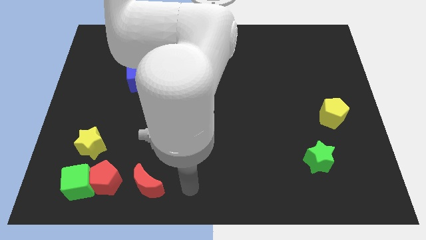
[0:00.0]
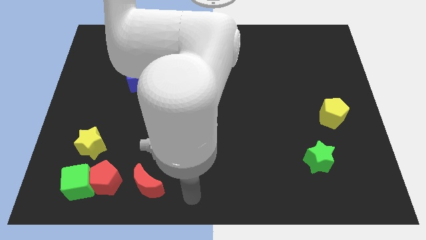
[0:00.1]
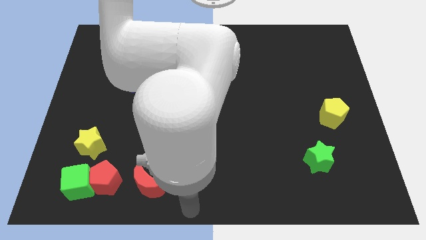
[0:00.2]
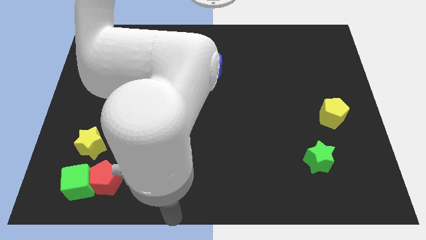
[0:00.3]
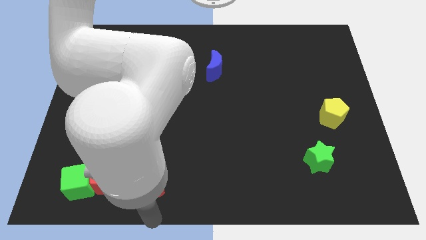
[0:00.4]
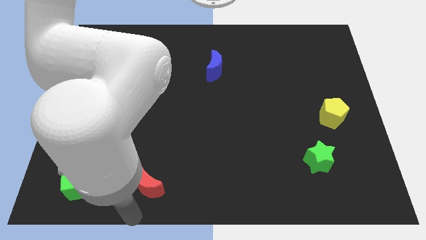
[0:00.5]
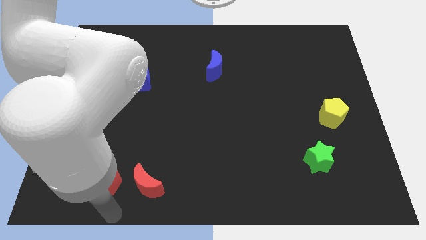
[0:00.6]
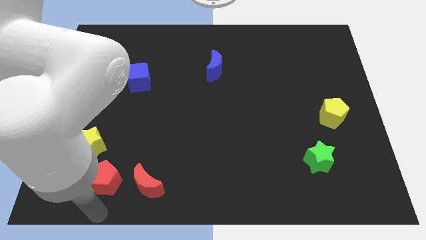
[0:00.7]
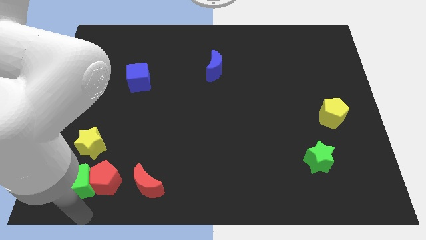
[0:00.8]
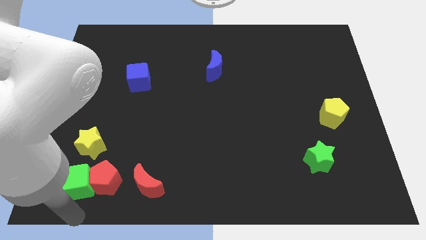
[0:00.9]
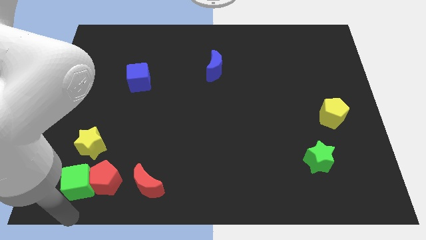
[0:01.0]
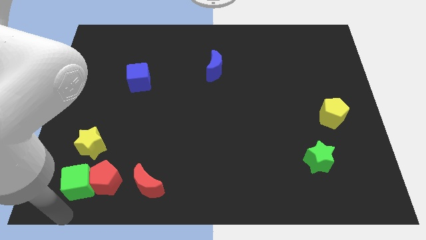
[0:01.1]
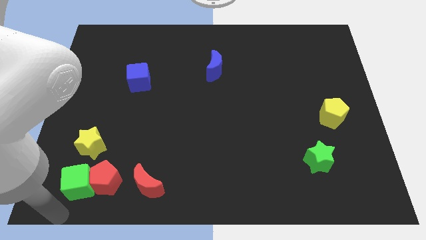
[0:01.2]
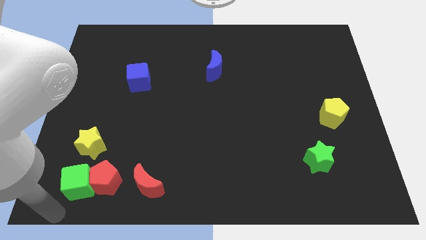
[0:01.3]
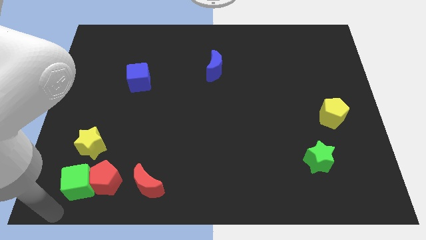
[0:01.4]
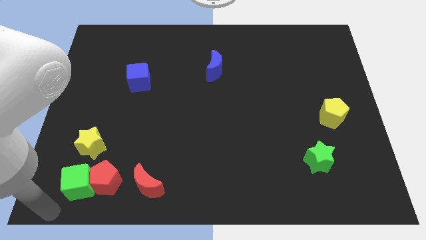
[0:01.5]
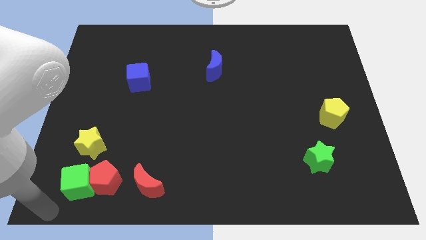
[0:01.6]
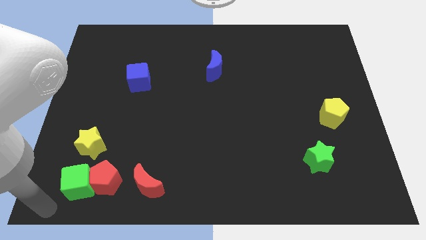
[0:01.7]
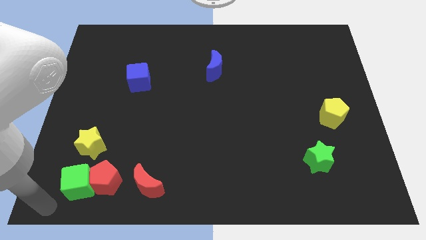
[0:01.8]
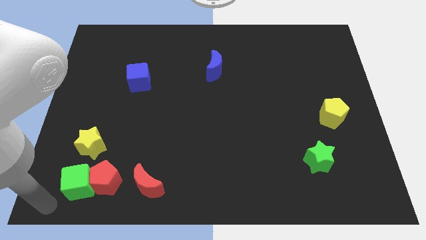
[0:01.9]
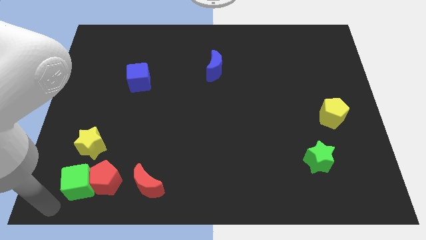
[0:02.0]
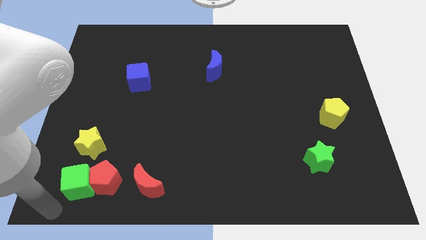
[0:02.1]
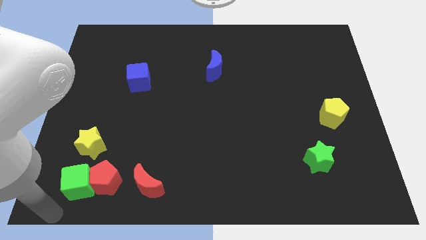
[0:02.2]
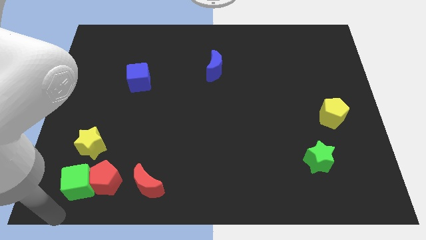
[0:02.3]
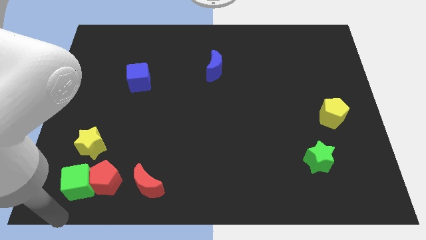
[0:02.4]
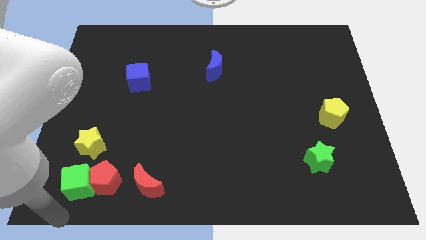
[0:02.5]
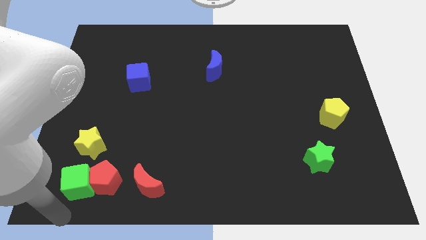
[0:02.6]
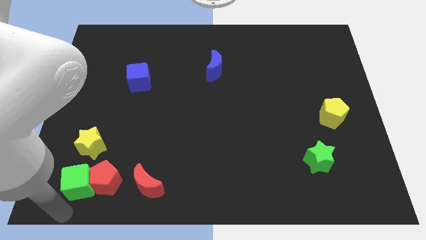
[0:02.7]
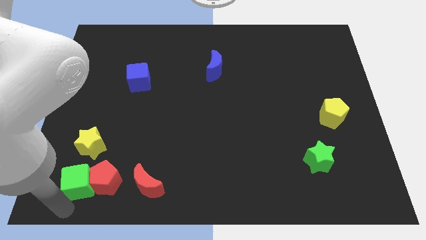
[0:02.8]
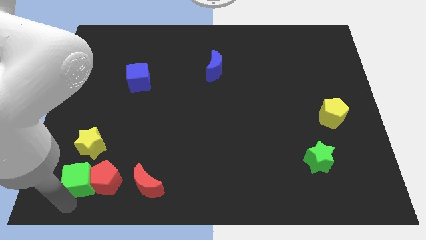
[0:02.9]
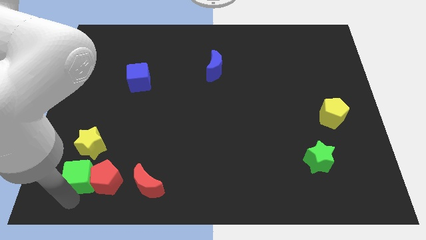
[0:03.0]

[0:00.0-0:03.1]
place your arm at the bottom of green cube

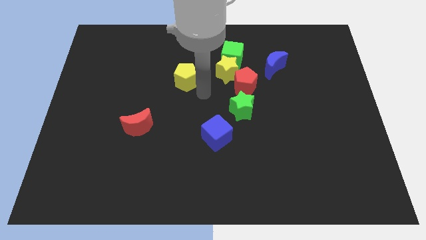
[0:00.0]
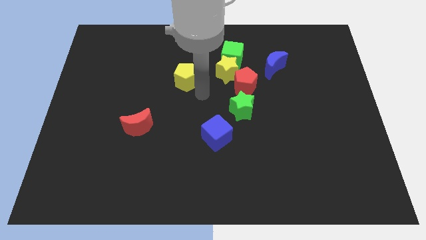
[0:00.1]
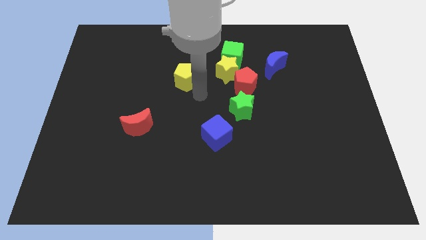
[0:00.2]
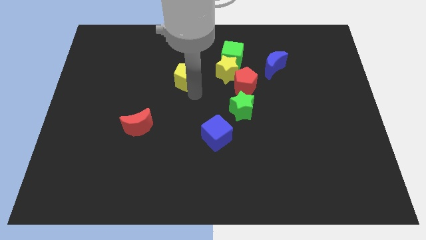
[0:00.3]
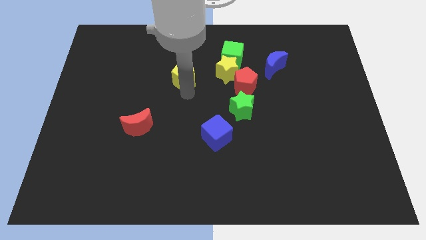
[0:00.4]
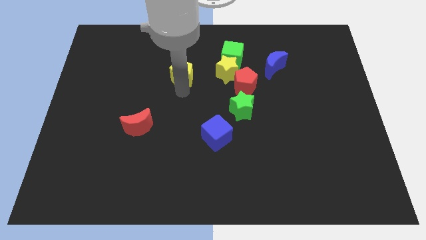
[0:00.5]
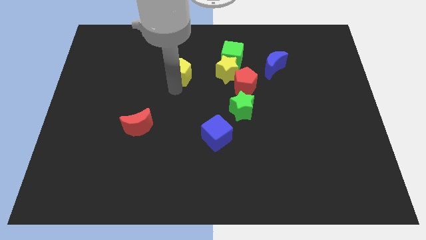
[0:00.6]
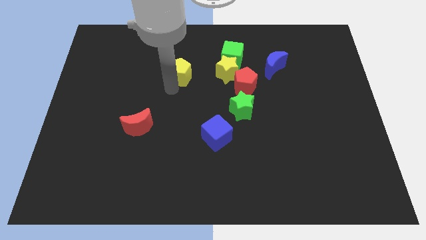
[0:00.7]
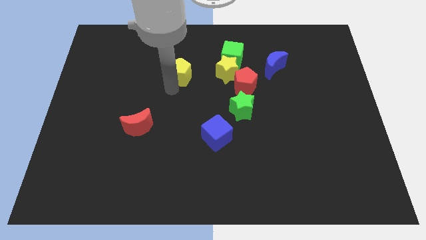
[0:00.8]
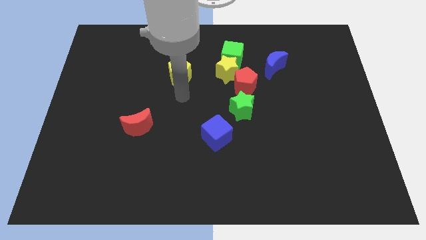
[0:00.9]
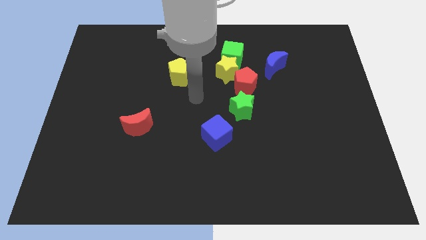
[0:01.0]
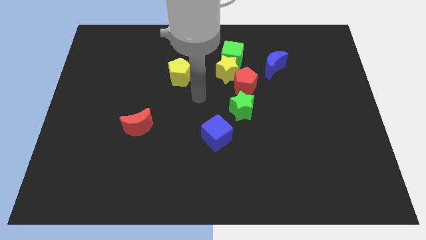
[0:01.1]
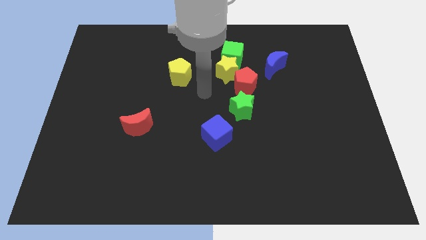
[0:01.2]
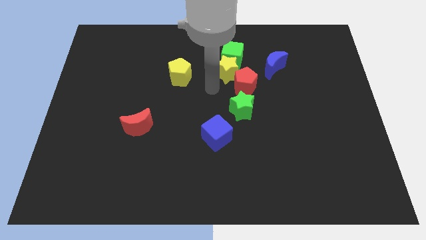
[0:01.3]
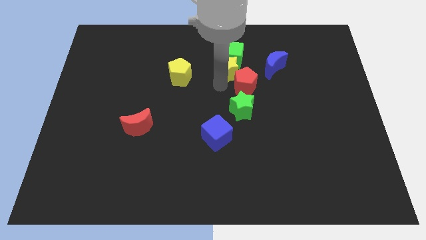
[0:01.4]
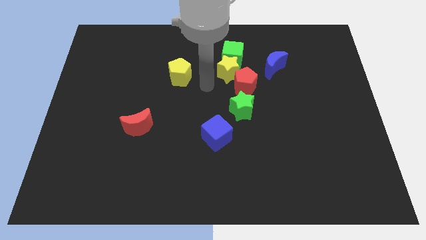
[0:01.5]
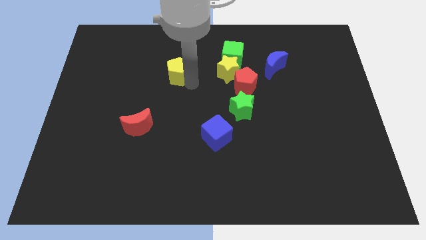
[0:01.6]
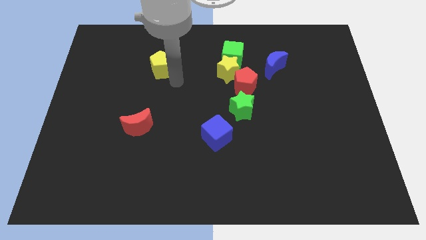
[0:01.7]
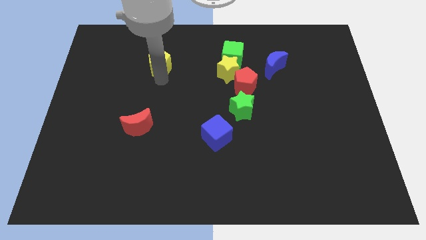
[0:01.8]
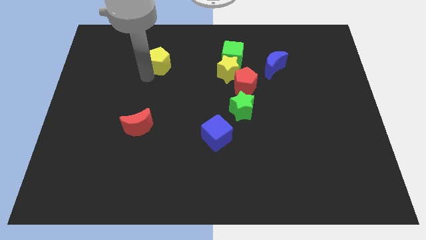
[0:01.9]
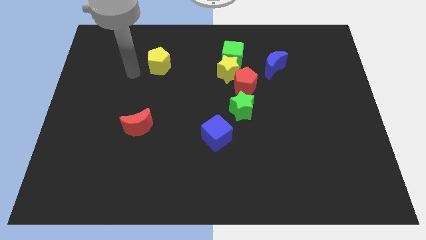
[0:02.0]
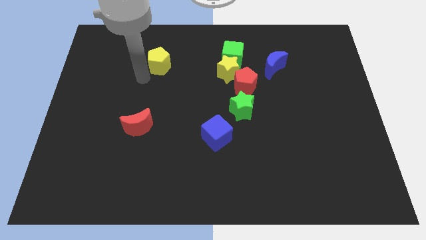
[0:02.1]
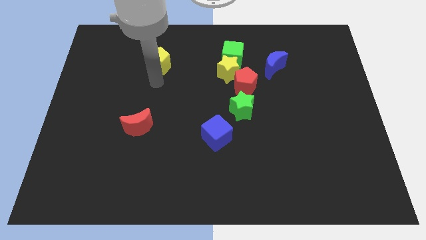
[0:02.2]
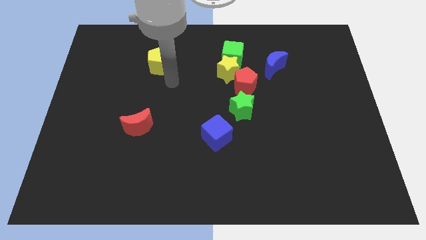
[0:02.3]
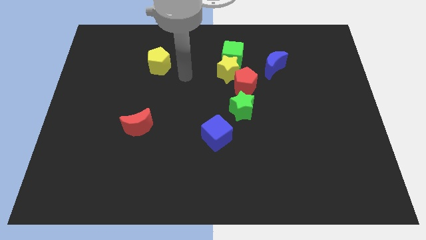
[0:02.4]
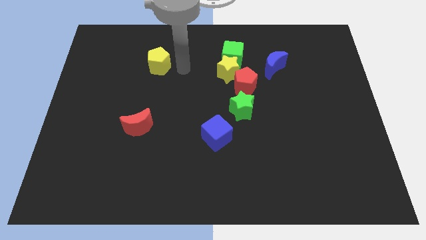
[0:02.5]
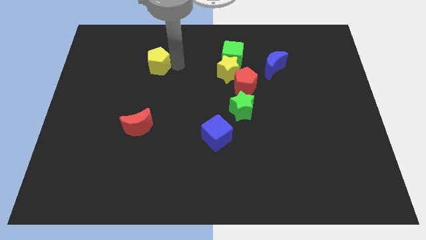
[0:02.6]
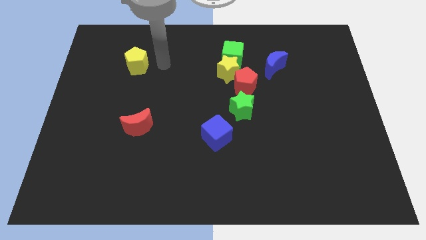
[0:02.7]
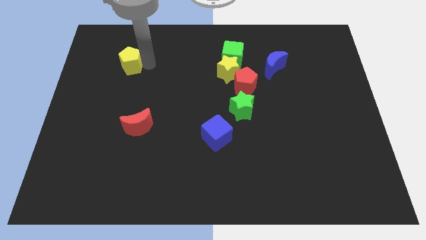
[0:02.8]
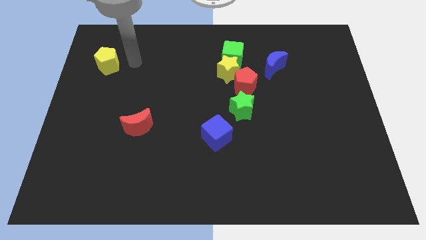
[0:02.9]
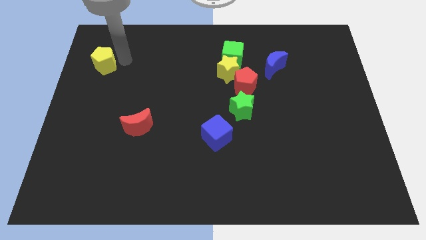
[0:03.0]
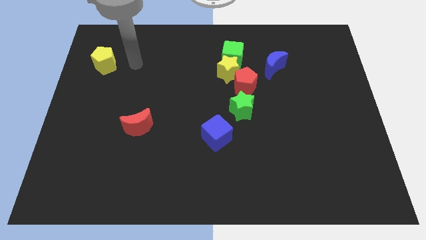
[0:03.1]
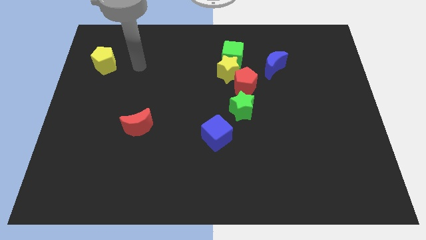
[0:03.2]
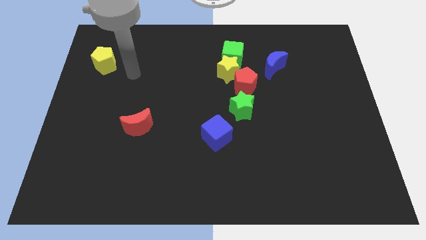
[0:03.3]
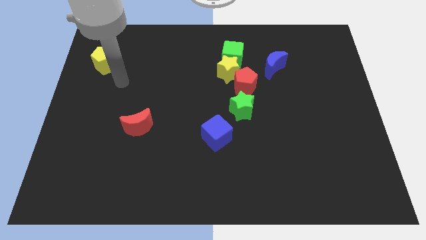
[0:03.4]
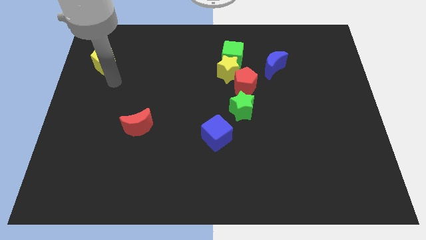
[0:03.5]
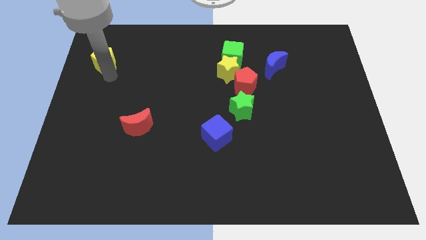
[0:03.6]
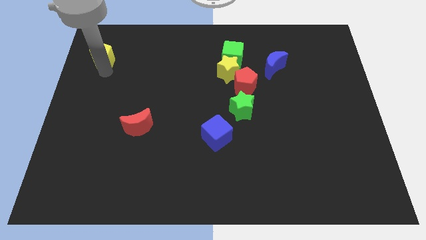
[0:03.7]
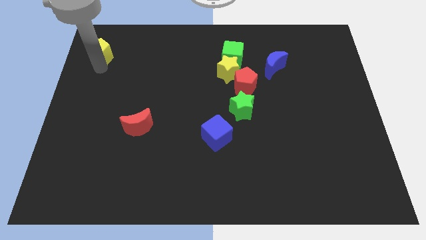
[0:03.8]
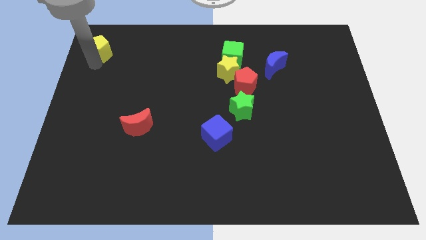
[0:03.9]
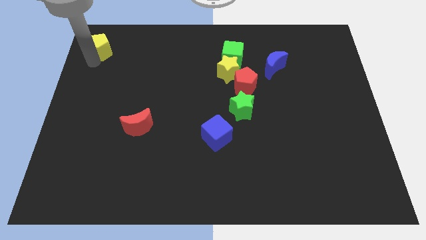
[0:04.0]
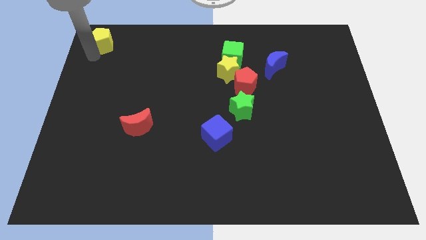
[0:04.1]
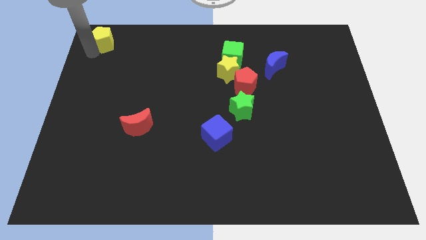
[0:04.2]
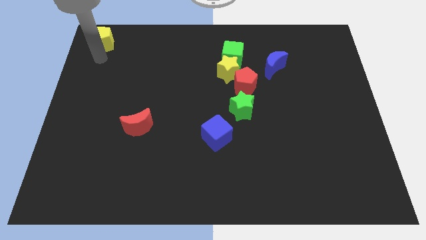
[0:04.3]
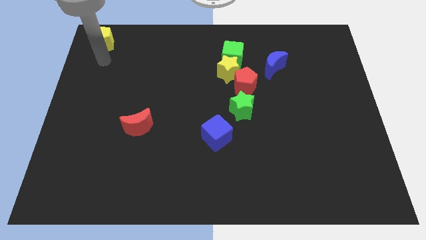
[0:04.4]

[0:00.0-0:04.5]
move the yellow pentagon to the top left of the board

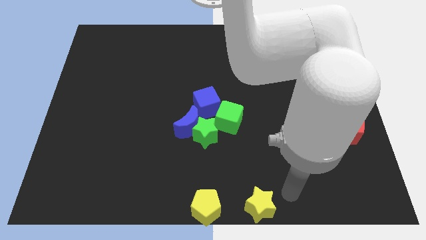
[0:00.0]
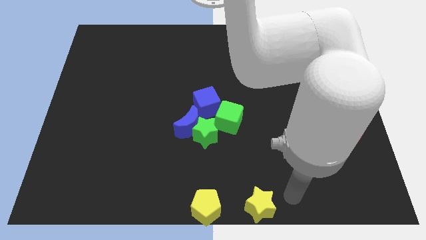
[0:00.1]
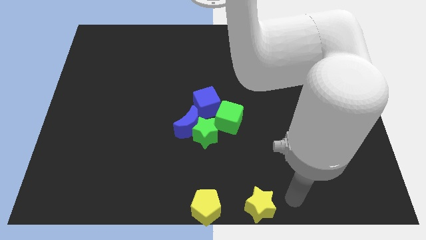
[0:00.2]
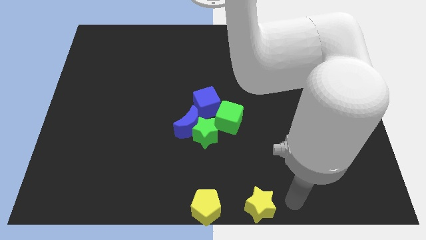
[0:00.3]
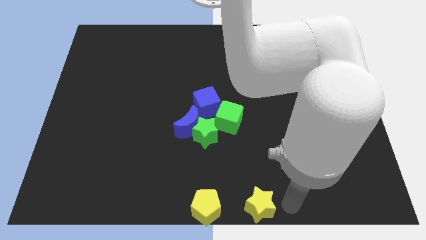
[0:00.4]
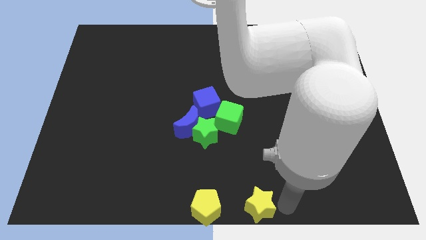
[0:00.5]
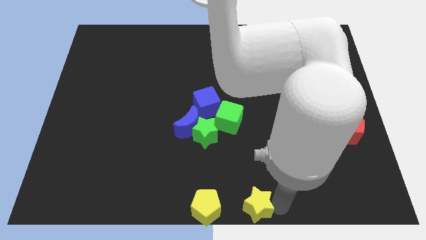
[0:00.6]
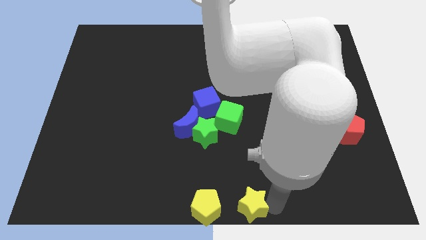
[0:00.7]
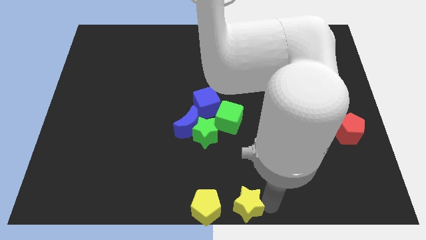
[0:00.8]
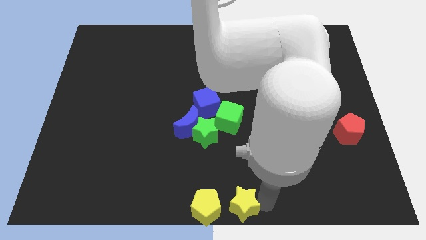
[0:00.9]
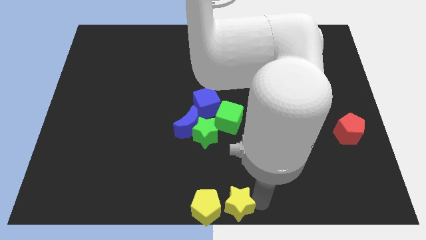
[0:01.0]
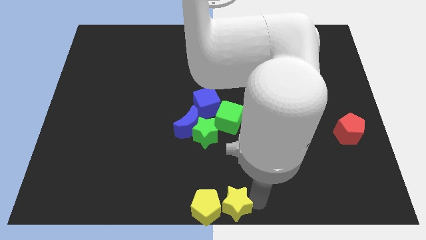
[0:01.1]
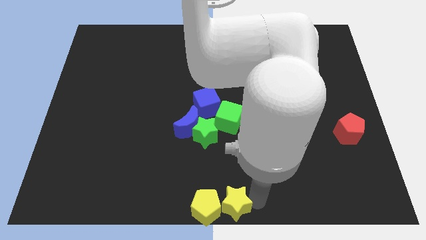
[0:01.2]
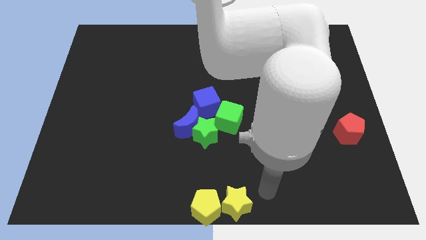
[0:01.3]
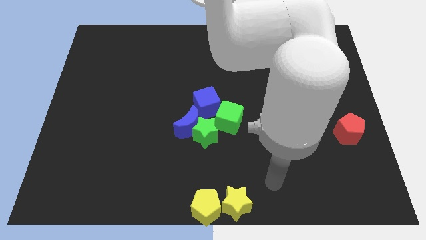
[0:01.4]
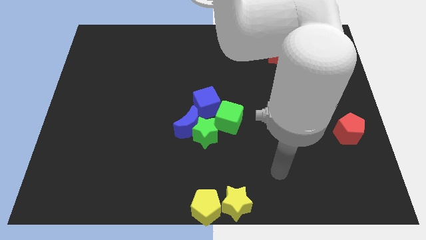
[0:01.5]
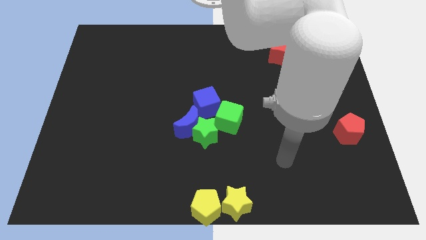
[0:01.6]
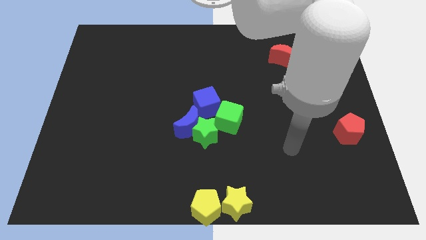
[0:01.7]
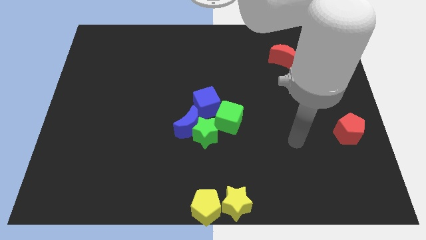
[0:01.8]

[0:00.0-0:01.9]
move the yellow star to the right of the yellow pentagon
